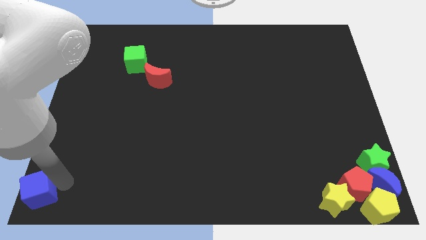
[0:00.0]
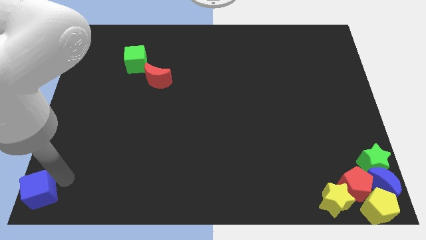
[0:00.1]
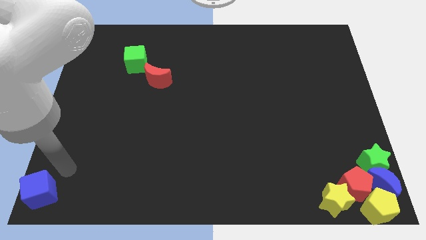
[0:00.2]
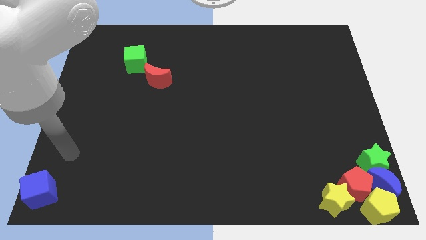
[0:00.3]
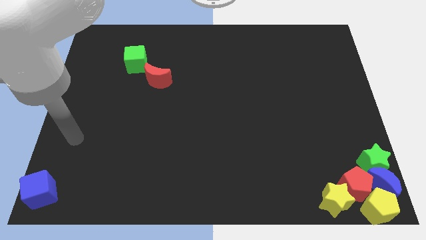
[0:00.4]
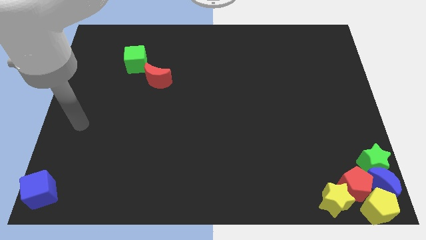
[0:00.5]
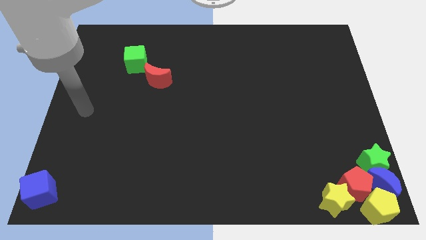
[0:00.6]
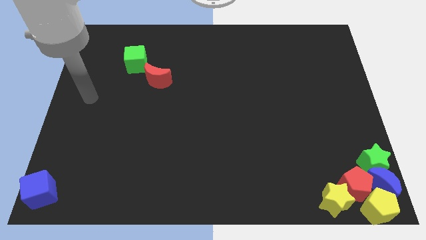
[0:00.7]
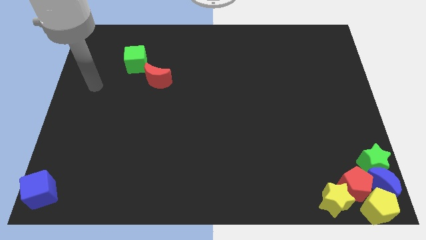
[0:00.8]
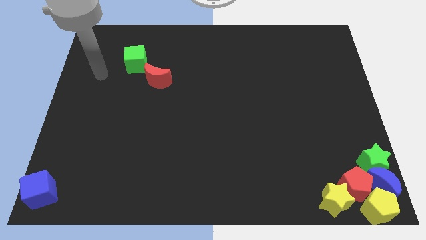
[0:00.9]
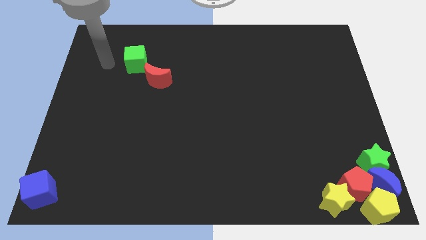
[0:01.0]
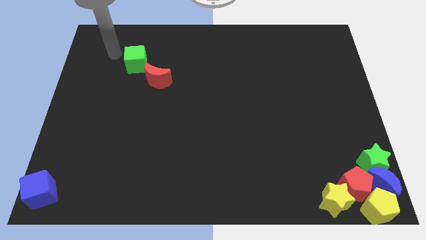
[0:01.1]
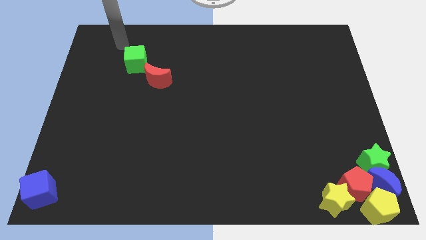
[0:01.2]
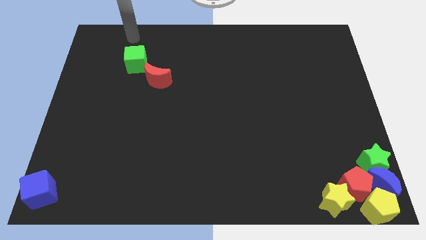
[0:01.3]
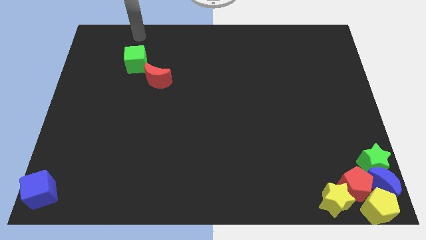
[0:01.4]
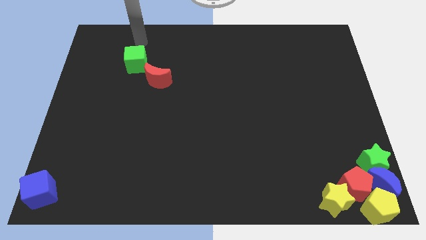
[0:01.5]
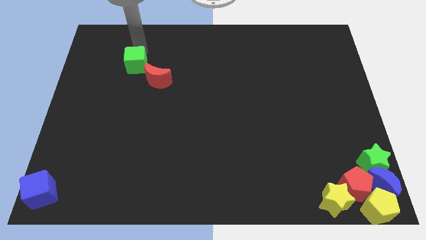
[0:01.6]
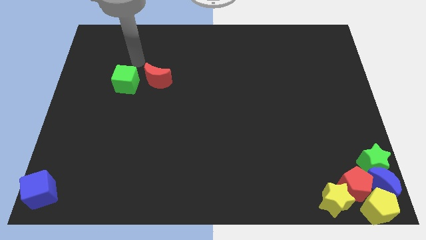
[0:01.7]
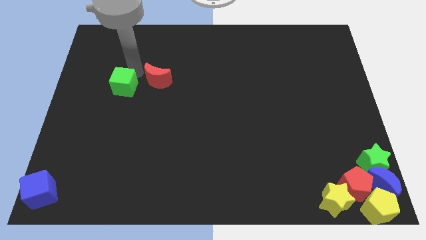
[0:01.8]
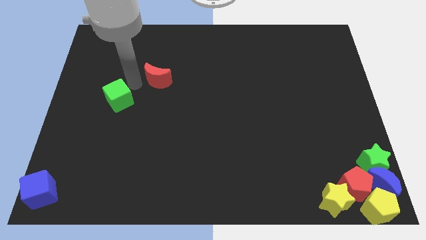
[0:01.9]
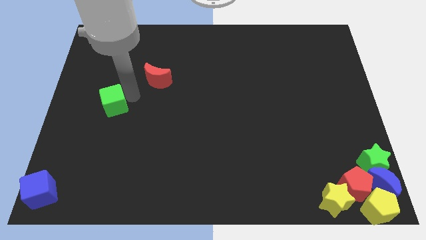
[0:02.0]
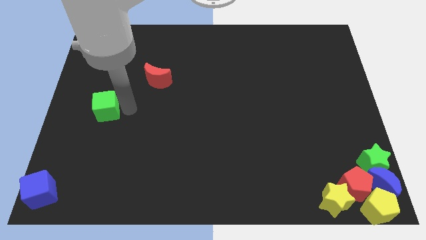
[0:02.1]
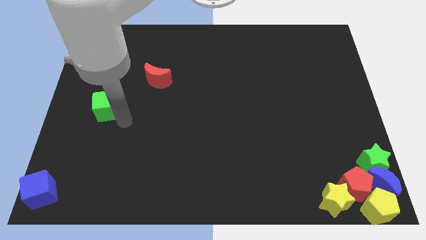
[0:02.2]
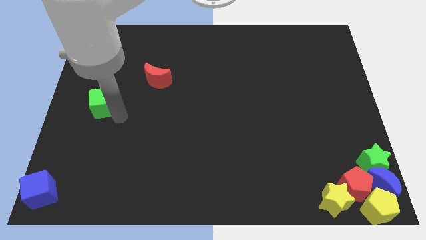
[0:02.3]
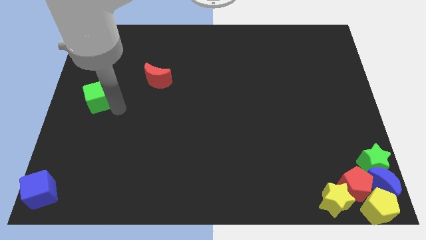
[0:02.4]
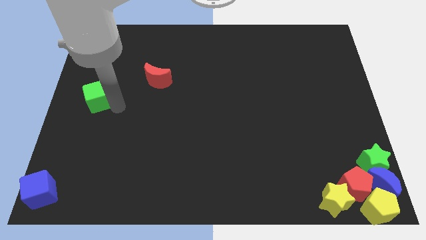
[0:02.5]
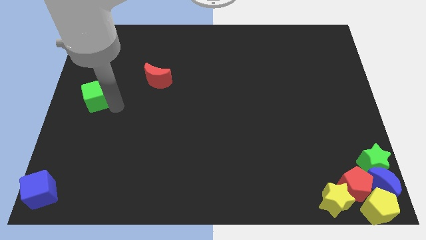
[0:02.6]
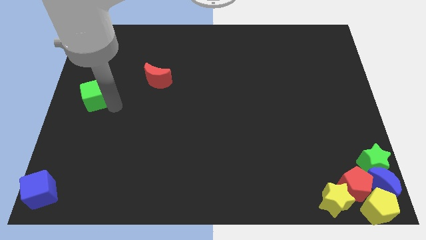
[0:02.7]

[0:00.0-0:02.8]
separate the green cube from the red moon

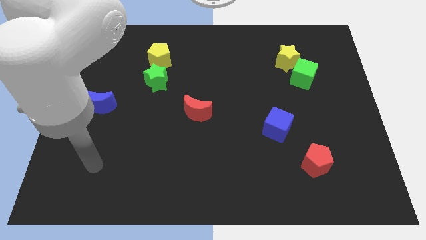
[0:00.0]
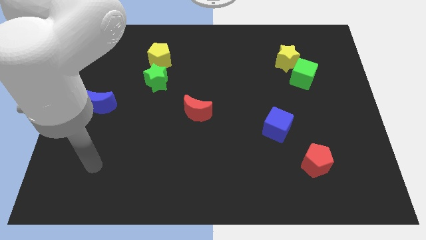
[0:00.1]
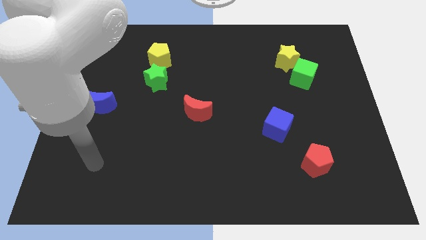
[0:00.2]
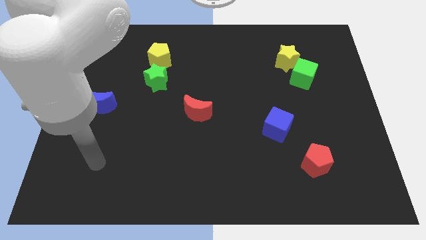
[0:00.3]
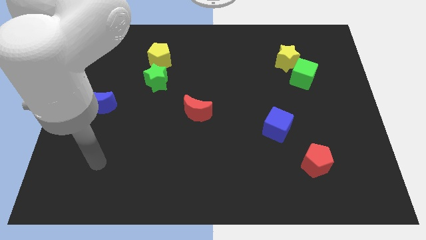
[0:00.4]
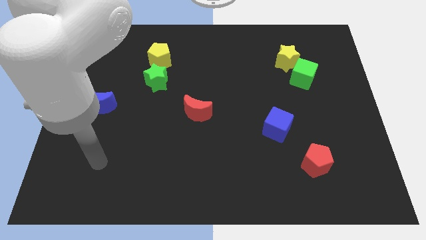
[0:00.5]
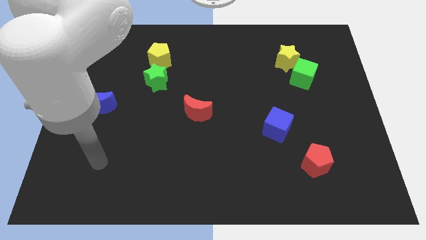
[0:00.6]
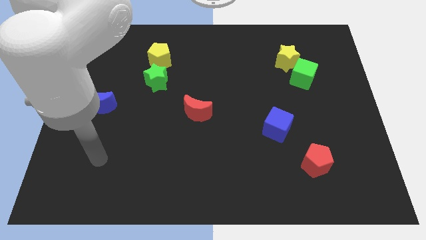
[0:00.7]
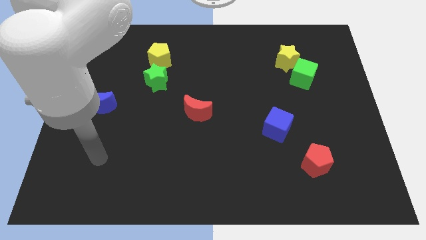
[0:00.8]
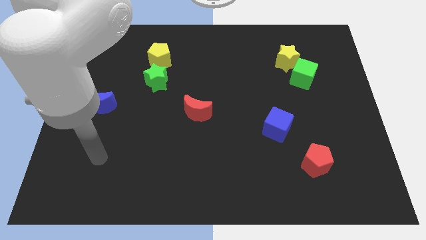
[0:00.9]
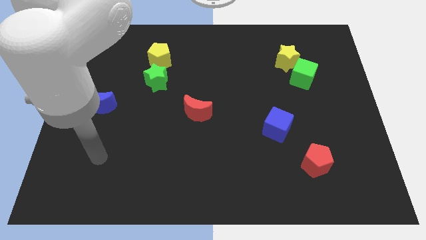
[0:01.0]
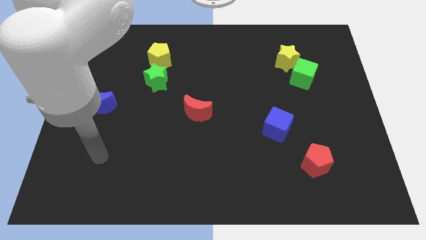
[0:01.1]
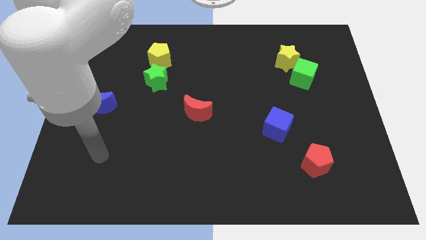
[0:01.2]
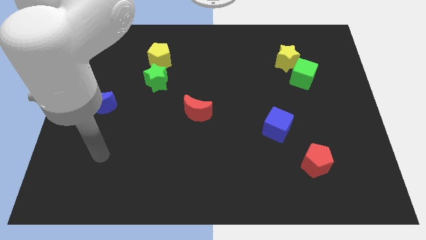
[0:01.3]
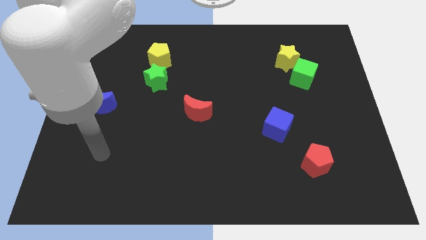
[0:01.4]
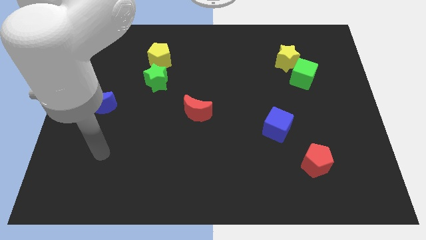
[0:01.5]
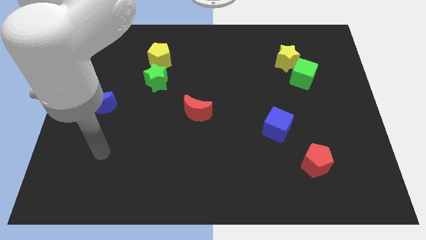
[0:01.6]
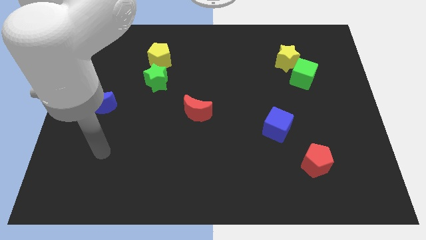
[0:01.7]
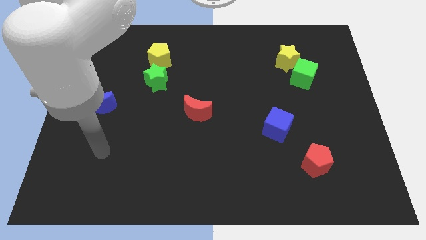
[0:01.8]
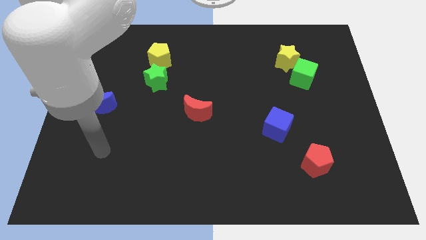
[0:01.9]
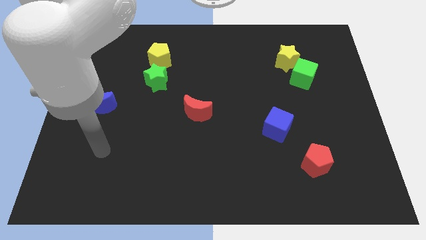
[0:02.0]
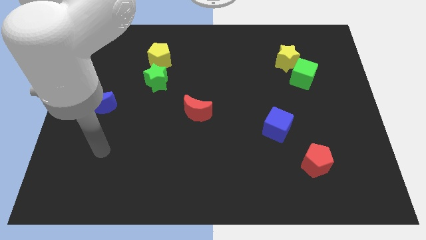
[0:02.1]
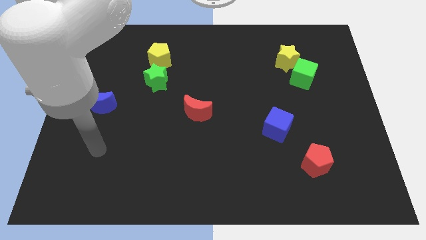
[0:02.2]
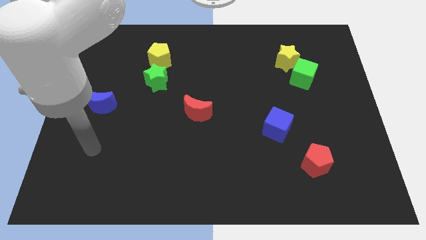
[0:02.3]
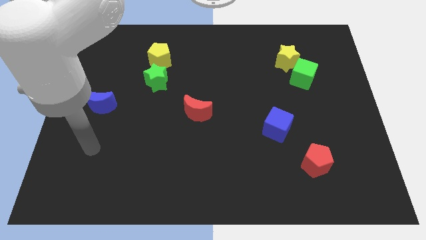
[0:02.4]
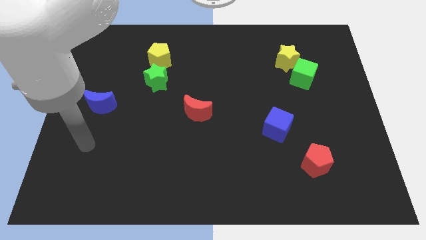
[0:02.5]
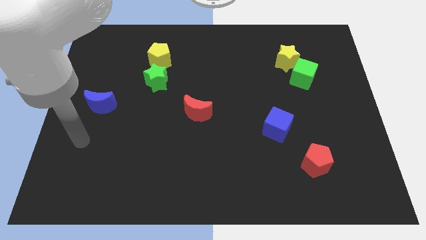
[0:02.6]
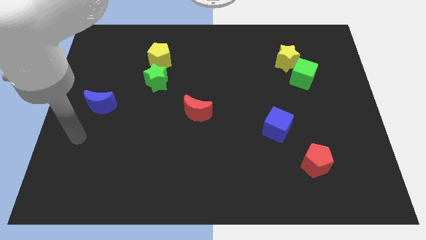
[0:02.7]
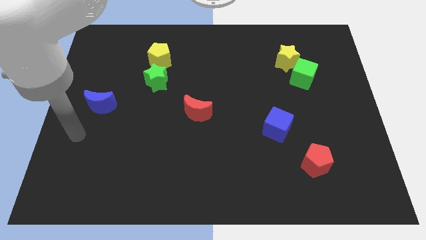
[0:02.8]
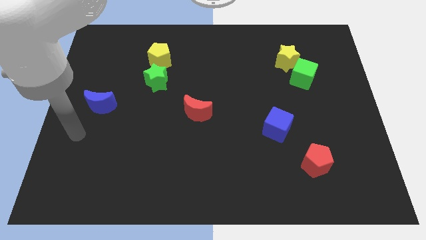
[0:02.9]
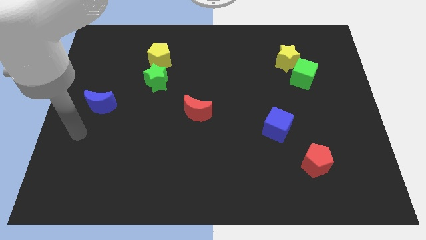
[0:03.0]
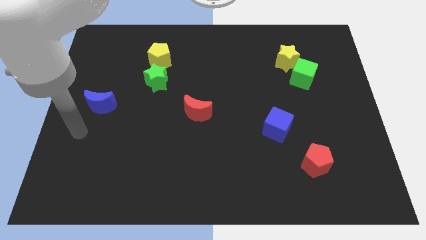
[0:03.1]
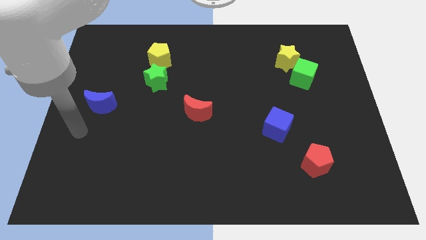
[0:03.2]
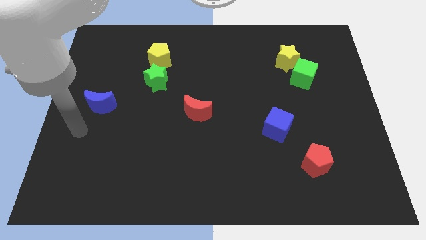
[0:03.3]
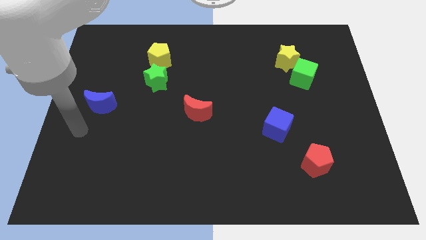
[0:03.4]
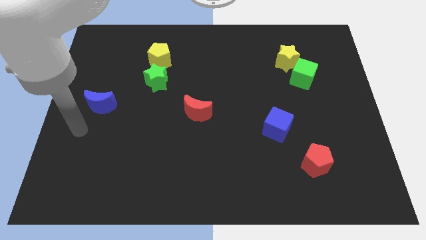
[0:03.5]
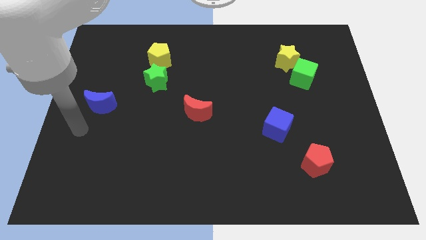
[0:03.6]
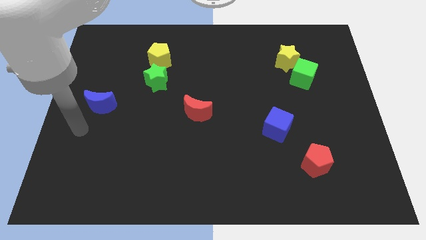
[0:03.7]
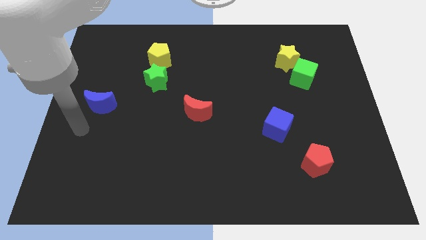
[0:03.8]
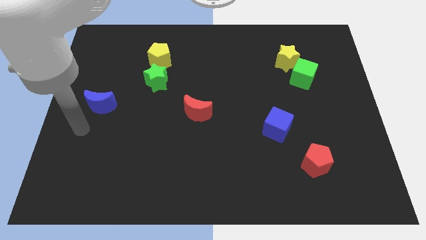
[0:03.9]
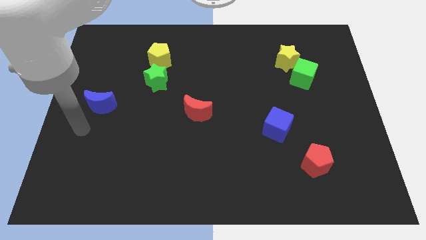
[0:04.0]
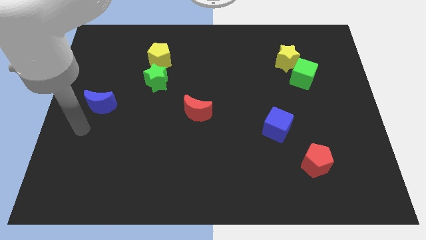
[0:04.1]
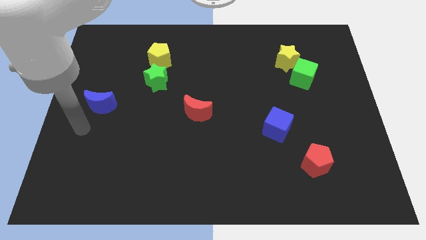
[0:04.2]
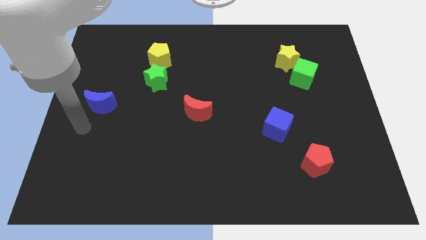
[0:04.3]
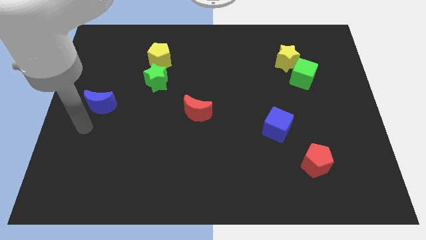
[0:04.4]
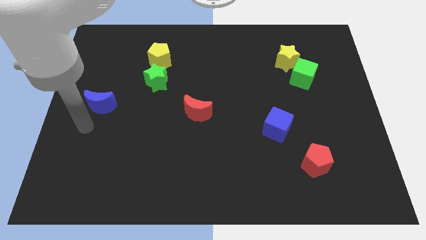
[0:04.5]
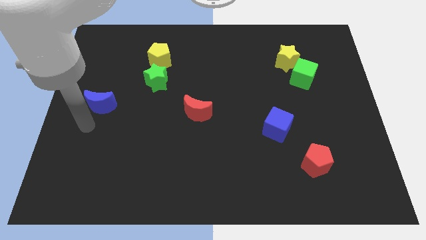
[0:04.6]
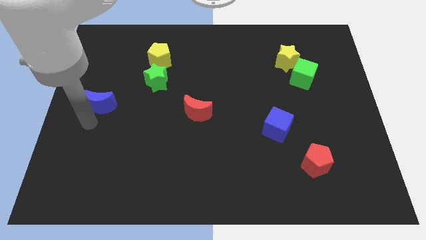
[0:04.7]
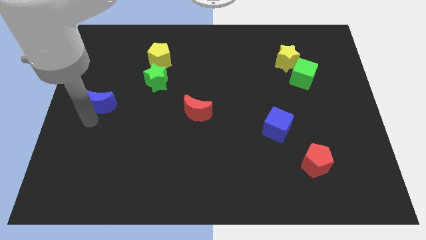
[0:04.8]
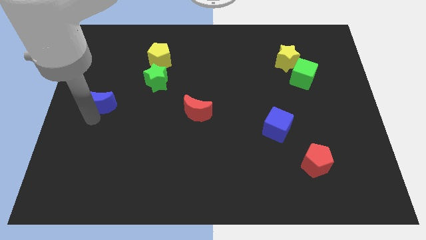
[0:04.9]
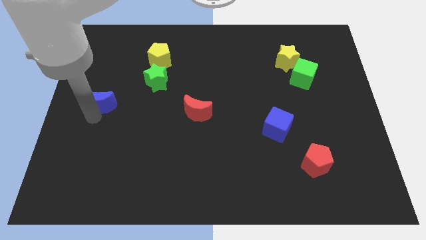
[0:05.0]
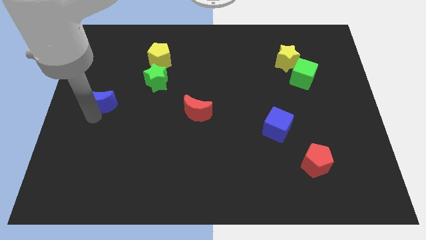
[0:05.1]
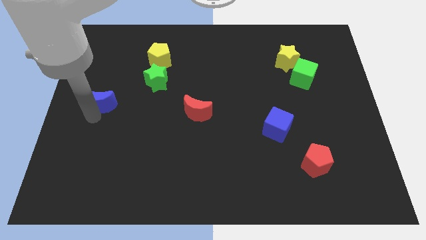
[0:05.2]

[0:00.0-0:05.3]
touch the bottom of the blue crescent

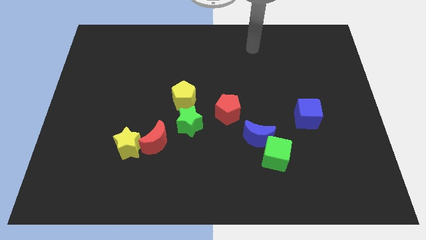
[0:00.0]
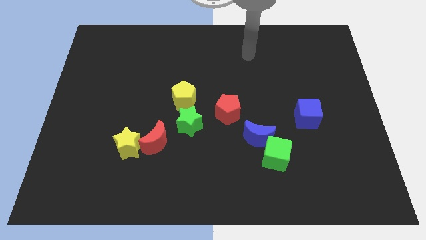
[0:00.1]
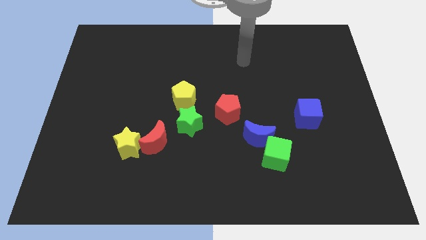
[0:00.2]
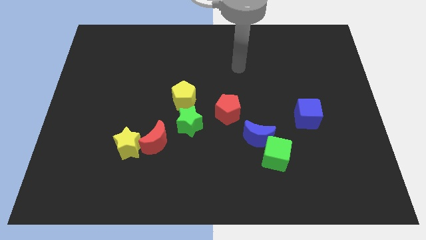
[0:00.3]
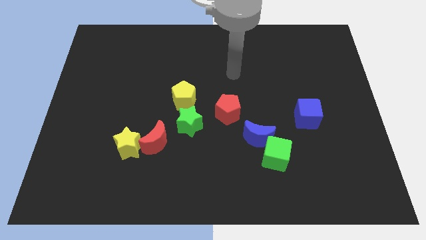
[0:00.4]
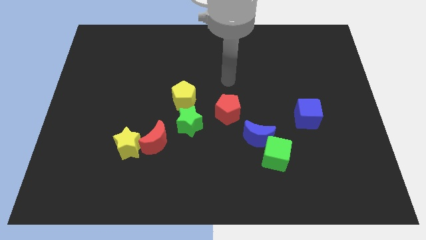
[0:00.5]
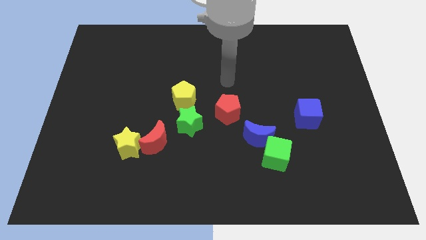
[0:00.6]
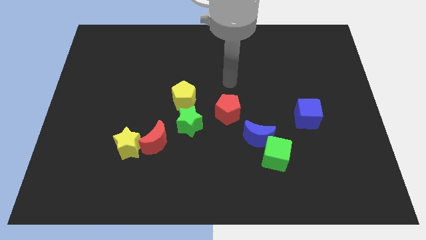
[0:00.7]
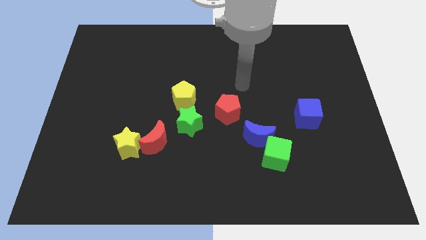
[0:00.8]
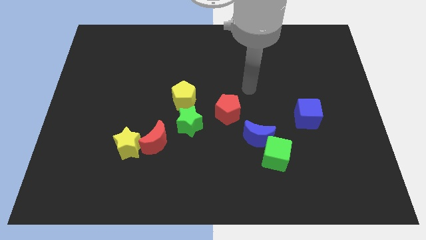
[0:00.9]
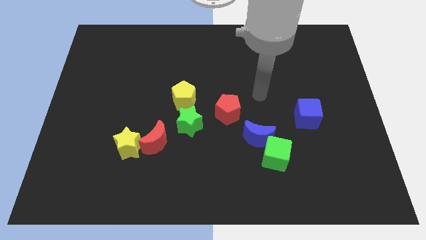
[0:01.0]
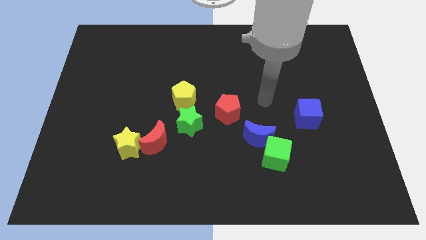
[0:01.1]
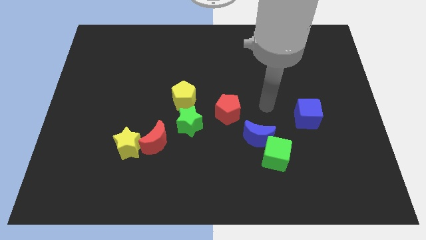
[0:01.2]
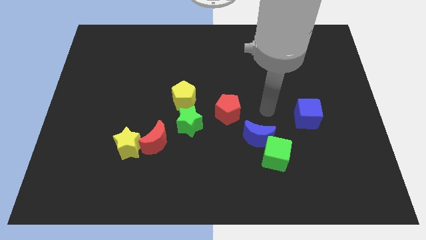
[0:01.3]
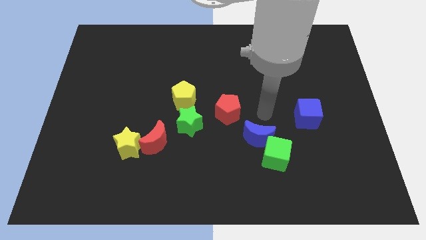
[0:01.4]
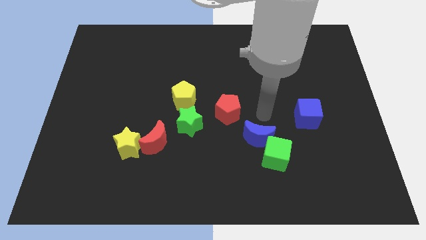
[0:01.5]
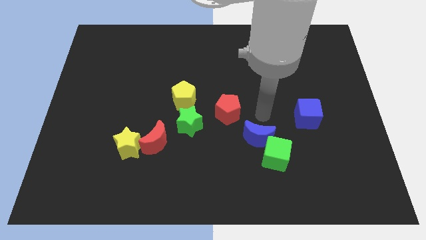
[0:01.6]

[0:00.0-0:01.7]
place your hand above the blue moon
